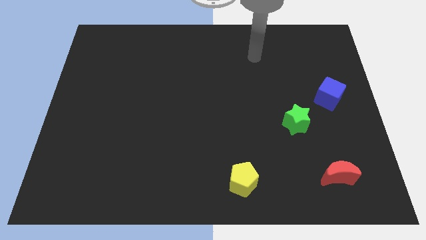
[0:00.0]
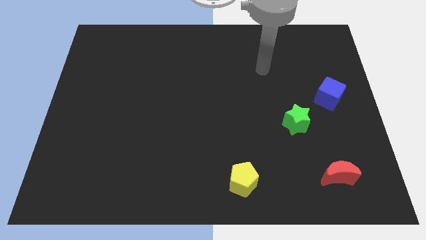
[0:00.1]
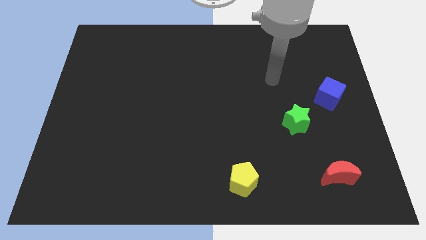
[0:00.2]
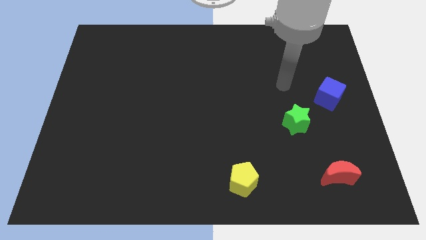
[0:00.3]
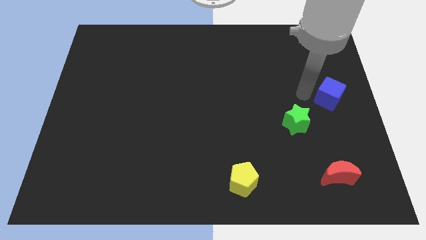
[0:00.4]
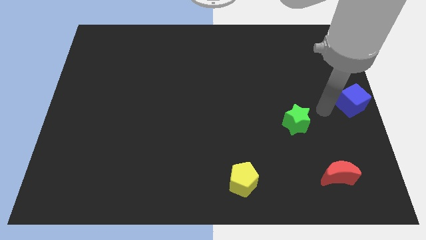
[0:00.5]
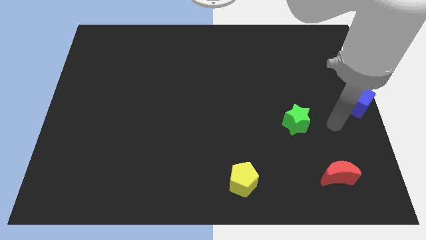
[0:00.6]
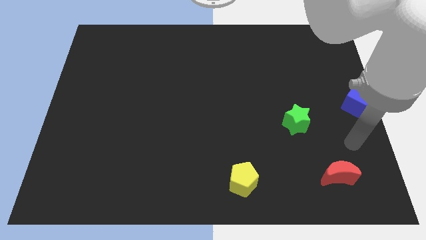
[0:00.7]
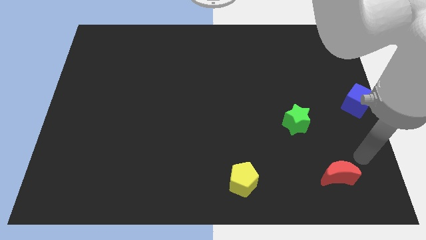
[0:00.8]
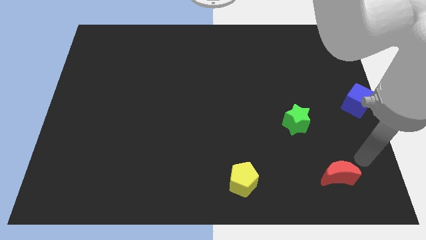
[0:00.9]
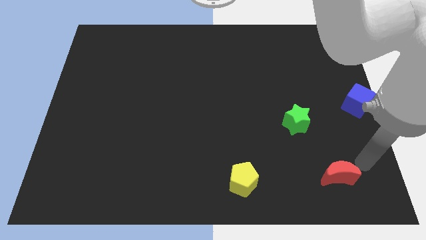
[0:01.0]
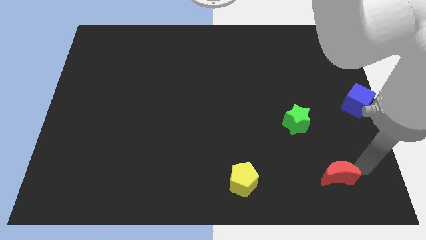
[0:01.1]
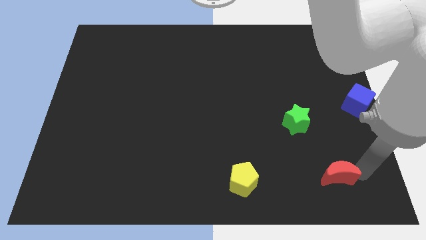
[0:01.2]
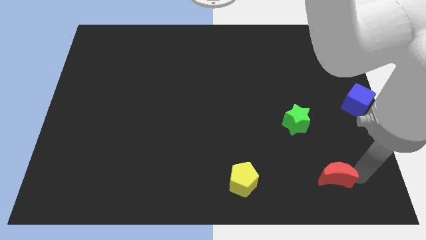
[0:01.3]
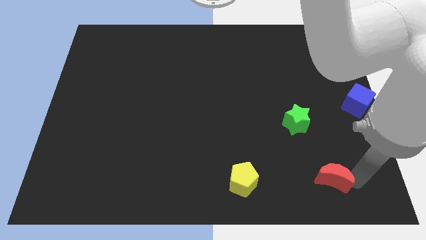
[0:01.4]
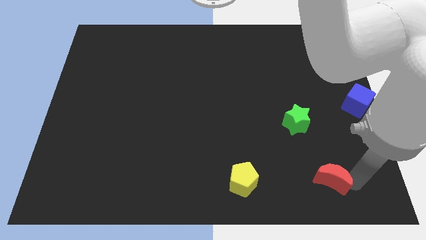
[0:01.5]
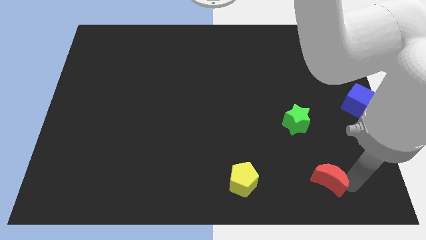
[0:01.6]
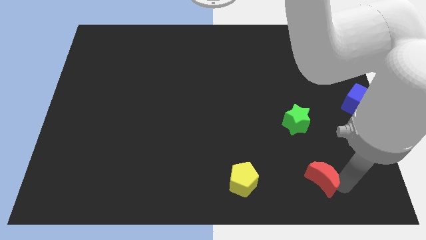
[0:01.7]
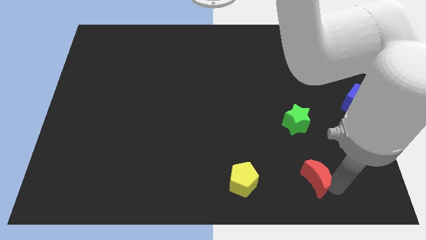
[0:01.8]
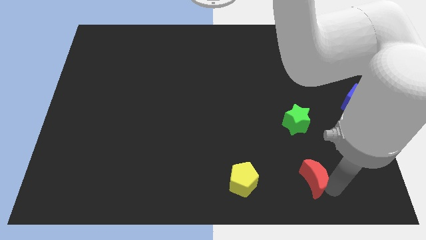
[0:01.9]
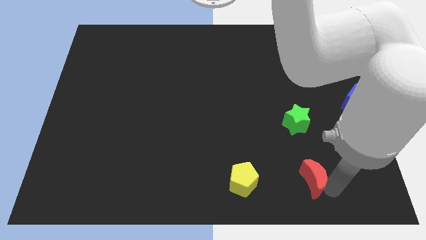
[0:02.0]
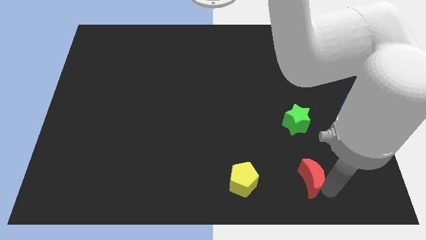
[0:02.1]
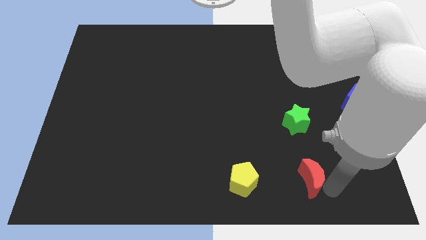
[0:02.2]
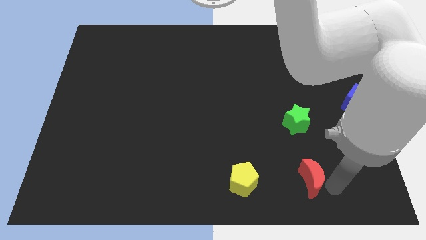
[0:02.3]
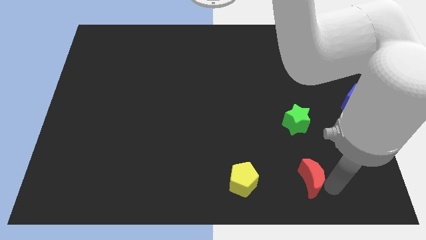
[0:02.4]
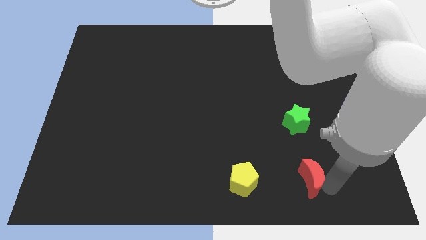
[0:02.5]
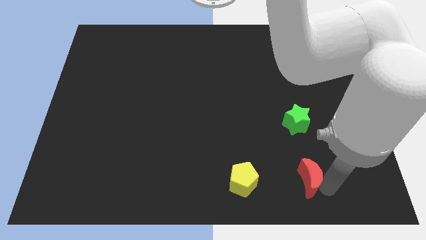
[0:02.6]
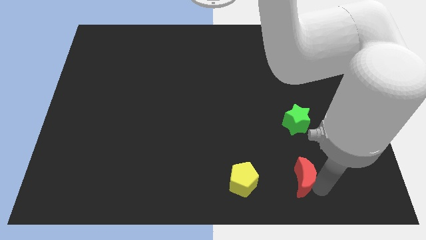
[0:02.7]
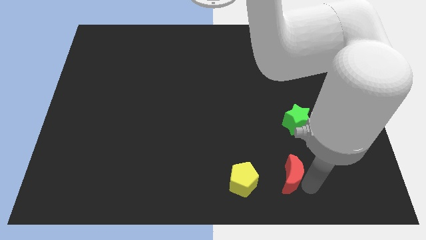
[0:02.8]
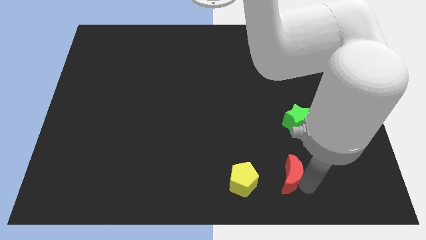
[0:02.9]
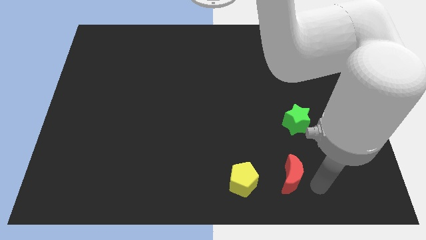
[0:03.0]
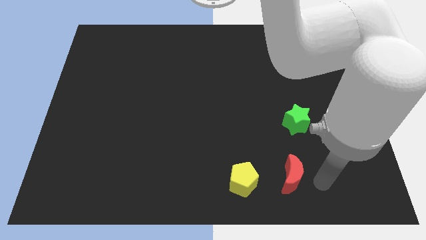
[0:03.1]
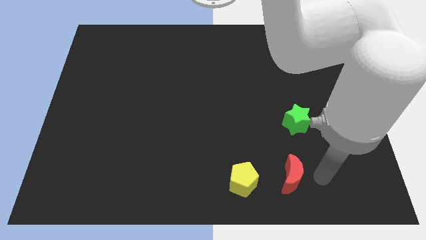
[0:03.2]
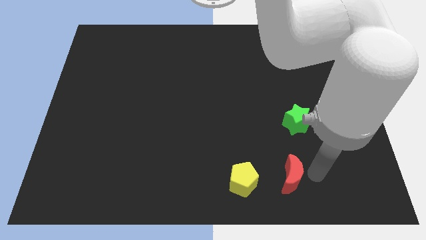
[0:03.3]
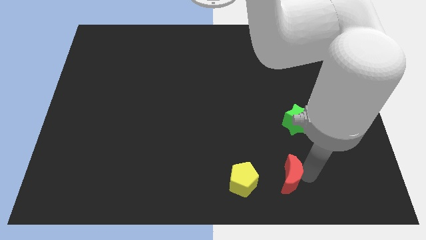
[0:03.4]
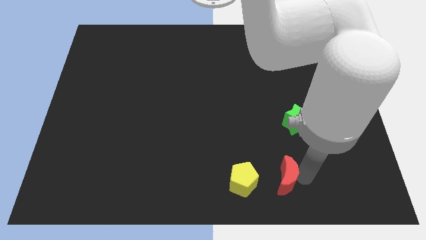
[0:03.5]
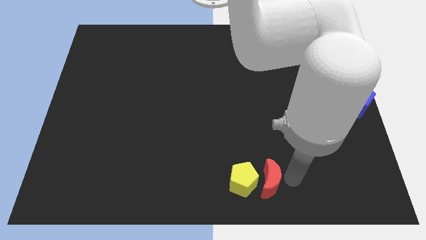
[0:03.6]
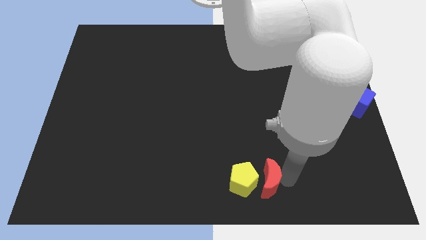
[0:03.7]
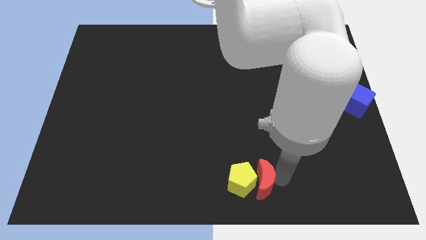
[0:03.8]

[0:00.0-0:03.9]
push the red moon to the yellow block

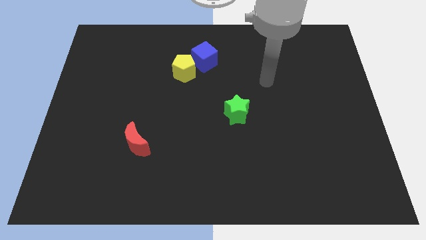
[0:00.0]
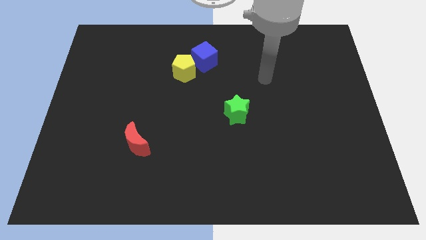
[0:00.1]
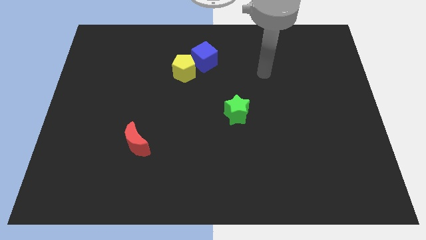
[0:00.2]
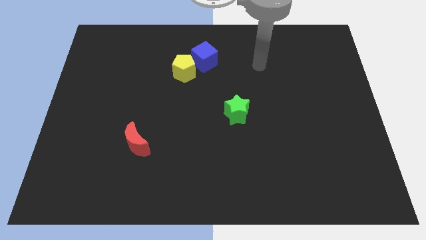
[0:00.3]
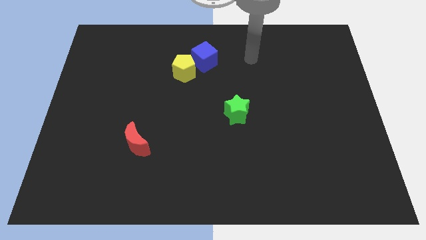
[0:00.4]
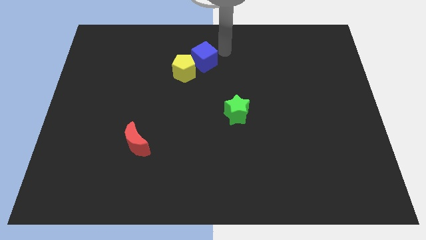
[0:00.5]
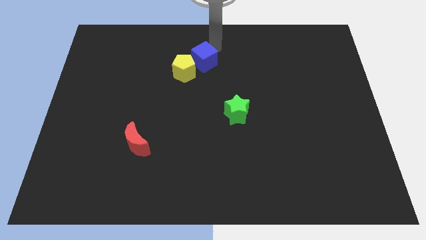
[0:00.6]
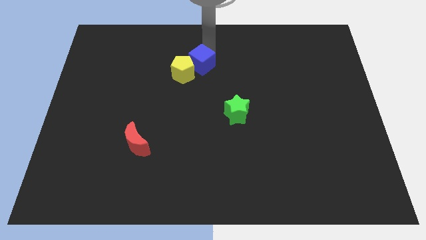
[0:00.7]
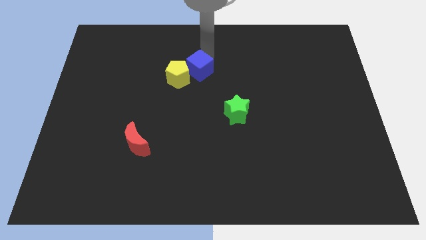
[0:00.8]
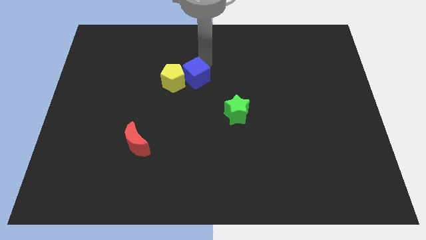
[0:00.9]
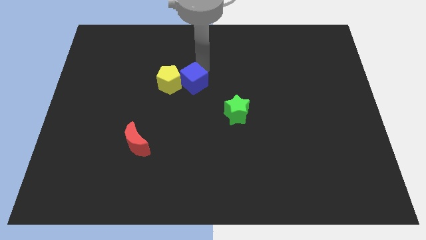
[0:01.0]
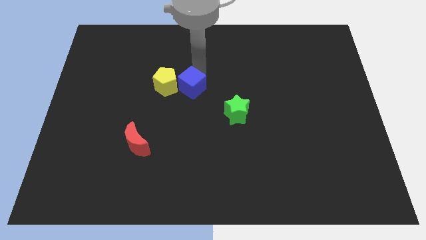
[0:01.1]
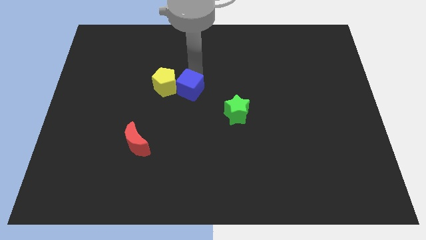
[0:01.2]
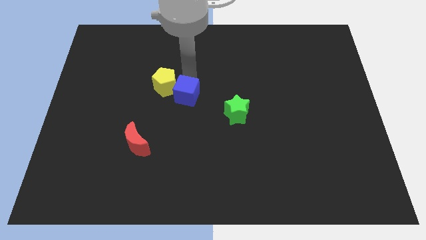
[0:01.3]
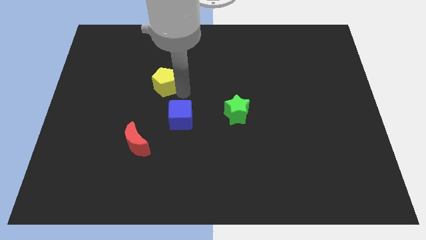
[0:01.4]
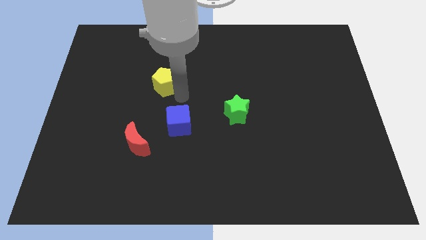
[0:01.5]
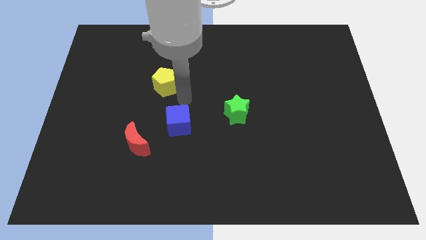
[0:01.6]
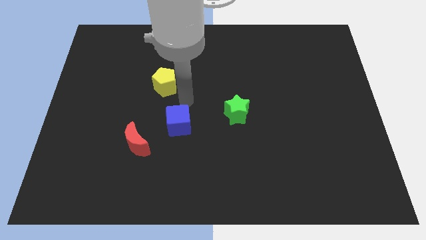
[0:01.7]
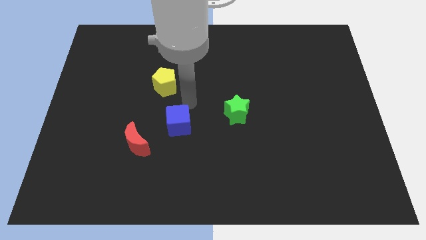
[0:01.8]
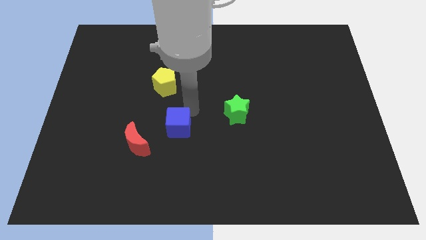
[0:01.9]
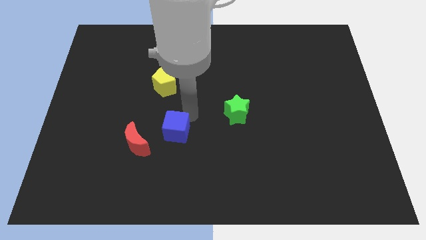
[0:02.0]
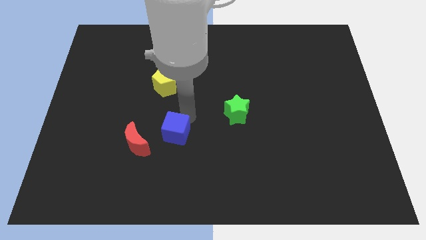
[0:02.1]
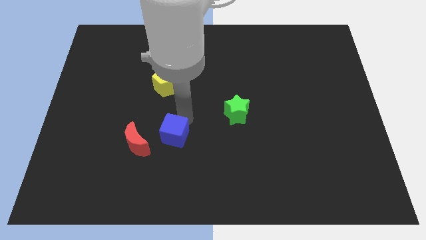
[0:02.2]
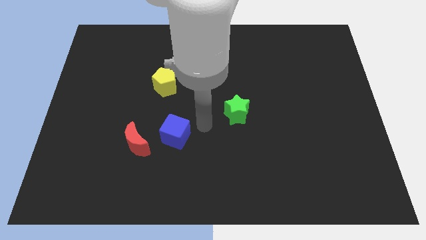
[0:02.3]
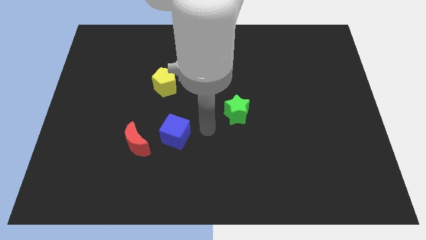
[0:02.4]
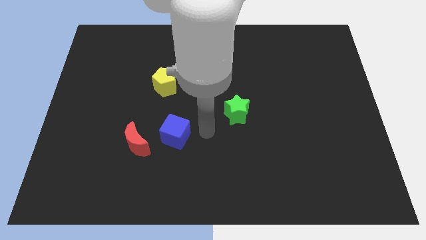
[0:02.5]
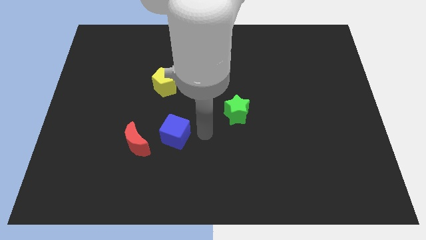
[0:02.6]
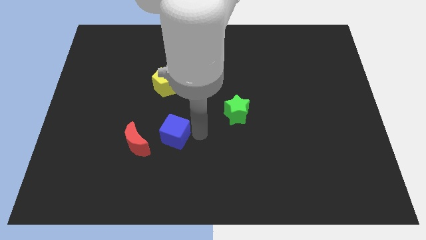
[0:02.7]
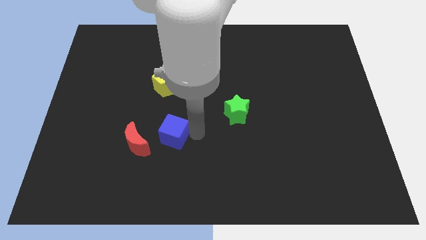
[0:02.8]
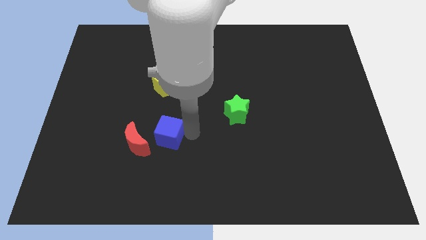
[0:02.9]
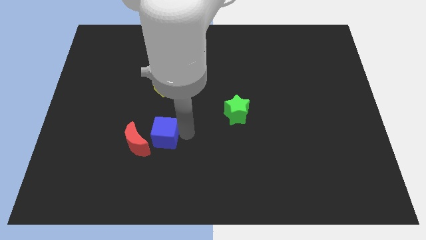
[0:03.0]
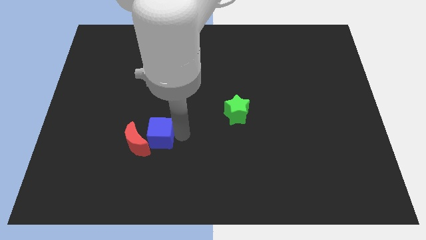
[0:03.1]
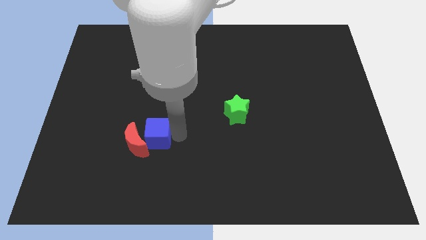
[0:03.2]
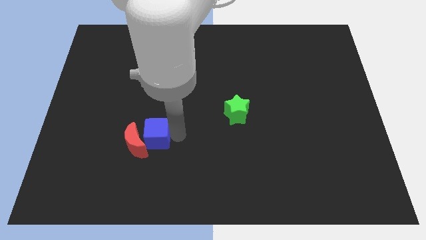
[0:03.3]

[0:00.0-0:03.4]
slide the cube close to the red moon

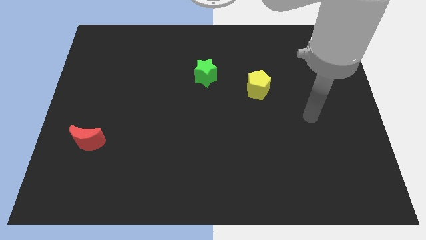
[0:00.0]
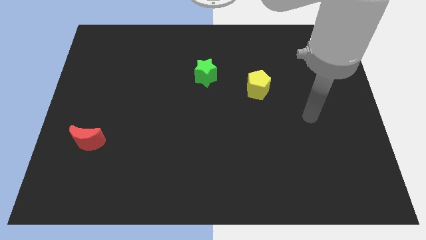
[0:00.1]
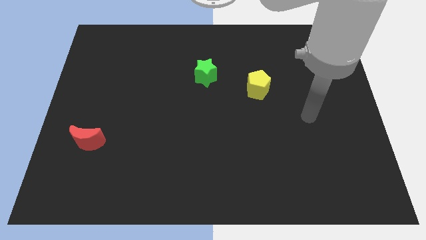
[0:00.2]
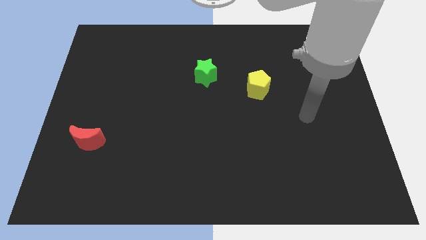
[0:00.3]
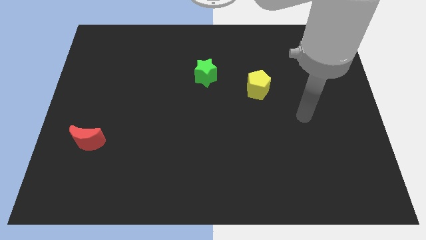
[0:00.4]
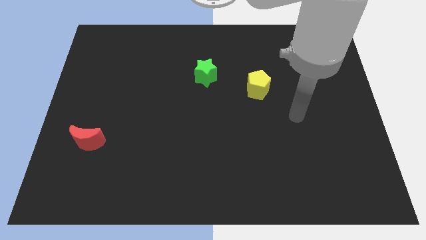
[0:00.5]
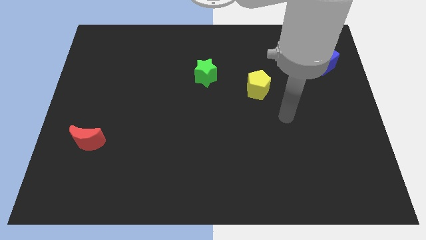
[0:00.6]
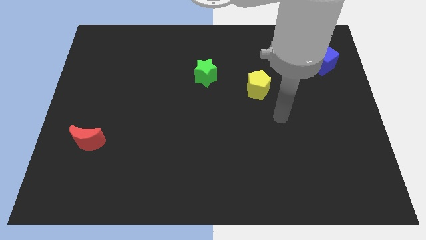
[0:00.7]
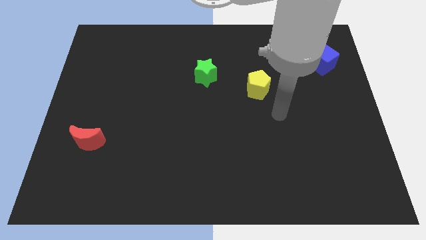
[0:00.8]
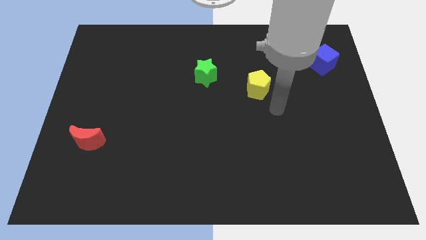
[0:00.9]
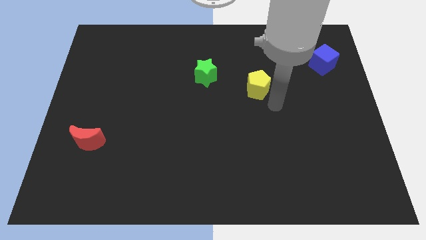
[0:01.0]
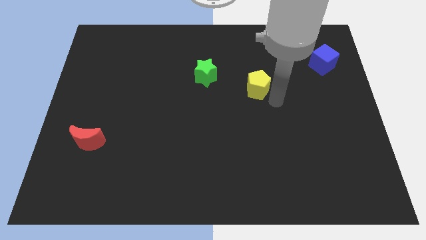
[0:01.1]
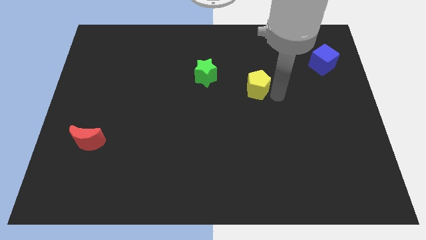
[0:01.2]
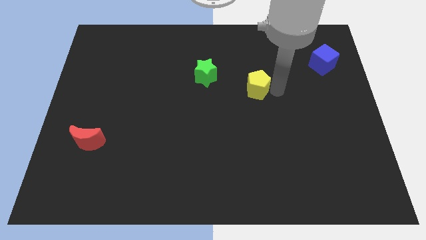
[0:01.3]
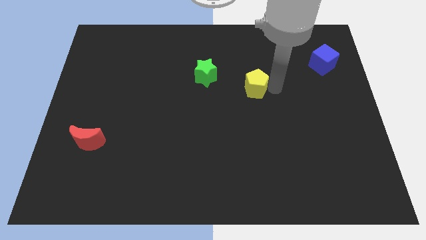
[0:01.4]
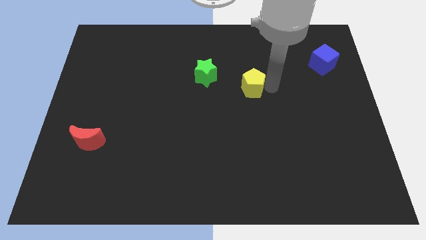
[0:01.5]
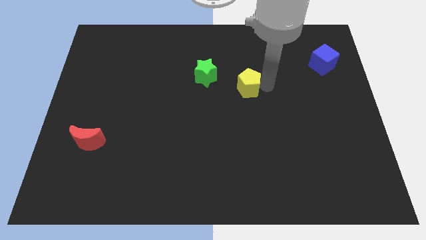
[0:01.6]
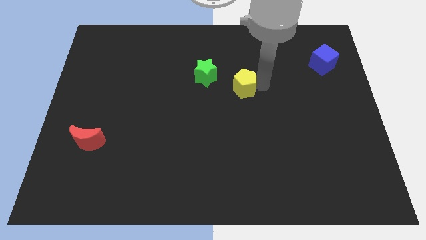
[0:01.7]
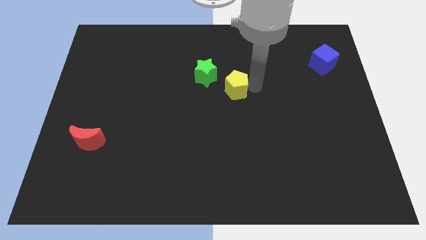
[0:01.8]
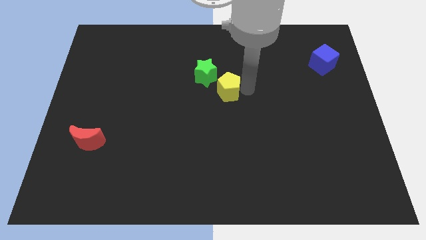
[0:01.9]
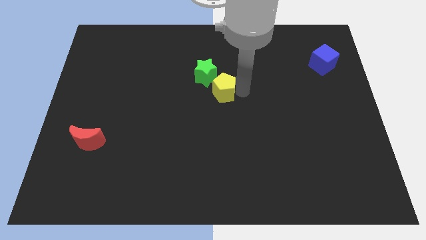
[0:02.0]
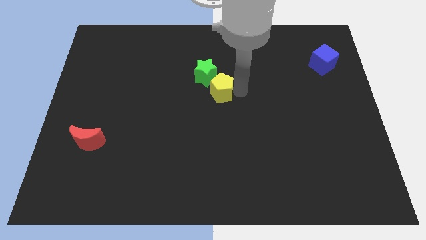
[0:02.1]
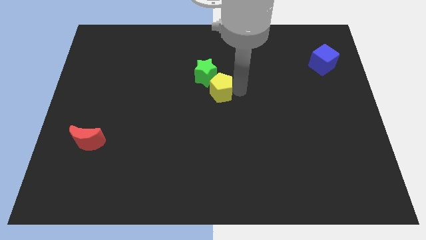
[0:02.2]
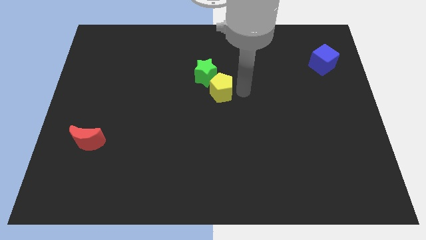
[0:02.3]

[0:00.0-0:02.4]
put the pentagon next to the star
